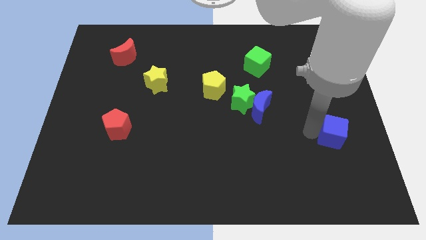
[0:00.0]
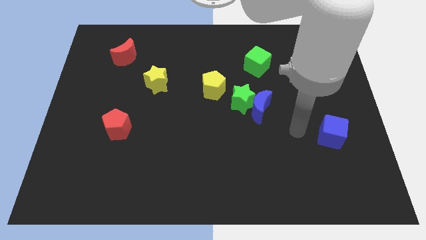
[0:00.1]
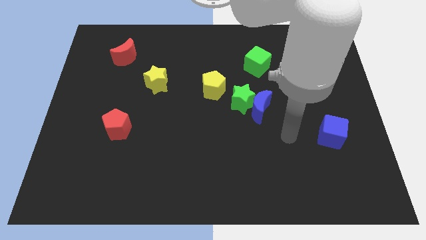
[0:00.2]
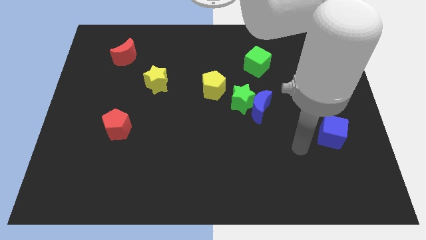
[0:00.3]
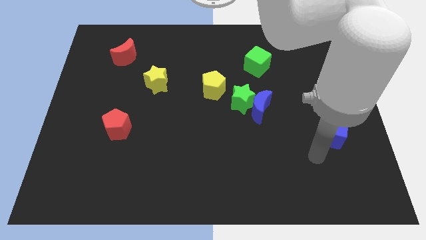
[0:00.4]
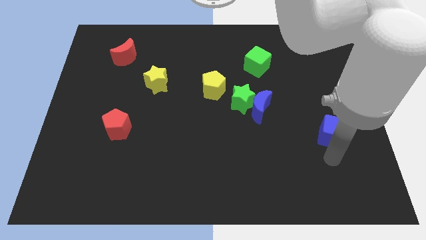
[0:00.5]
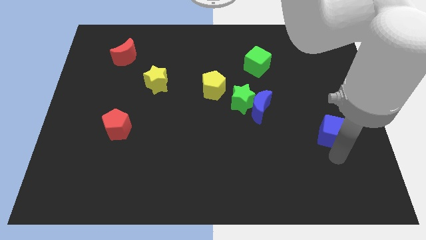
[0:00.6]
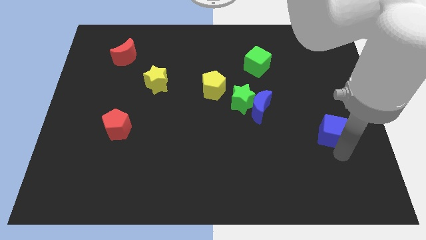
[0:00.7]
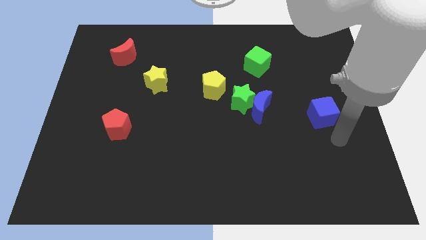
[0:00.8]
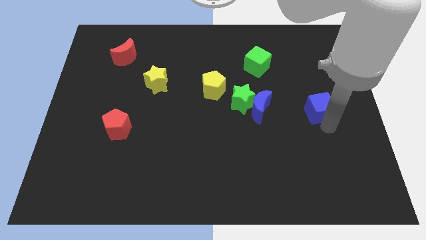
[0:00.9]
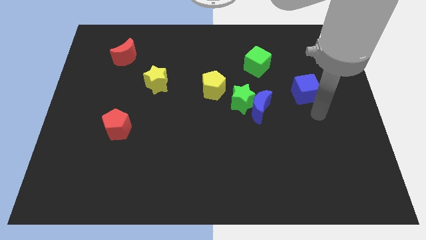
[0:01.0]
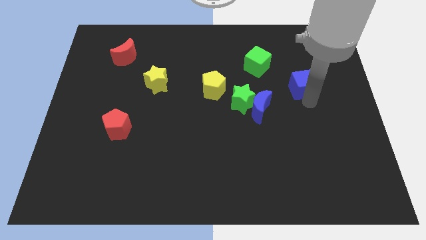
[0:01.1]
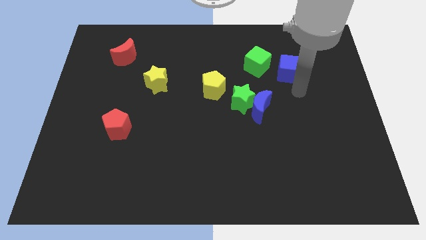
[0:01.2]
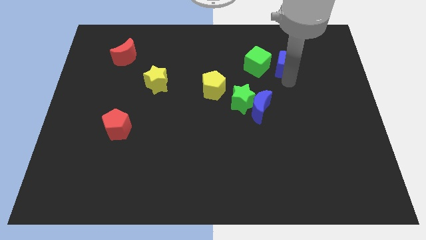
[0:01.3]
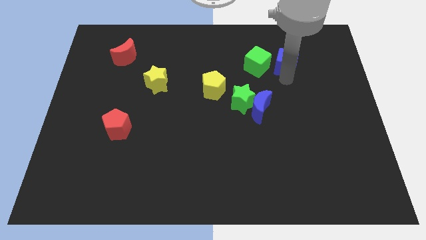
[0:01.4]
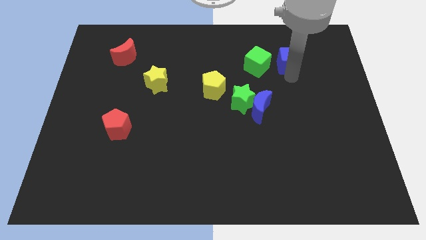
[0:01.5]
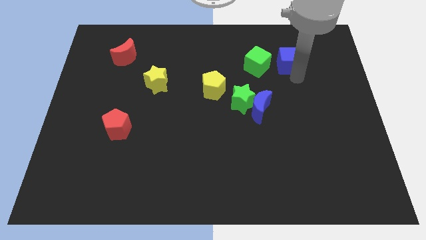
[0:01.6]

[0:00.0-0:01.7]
place the blue cube near to the green cube

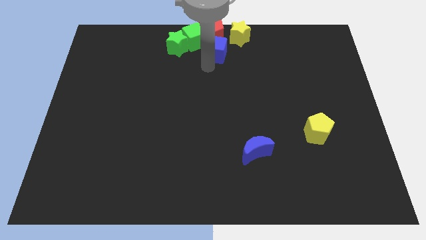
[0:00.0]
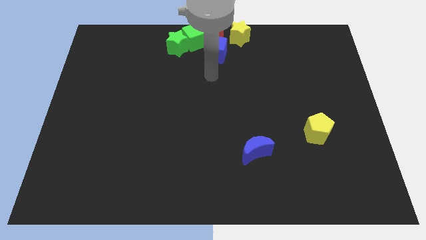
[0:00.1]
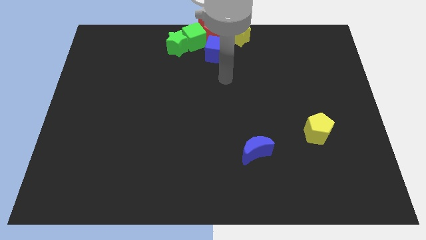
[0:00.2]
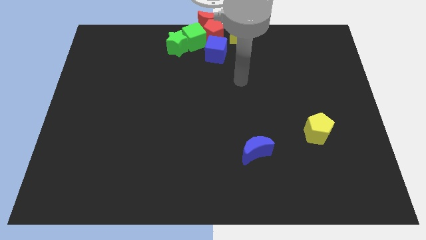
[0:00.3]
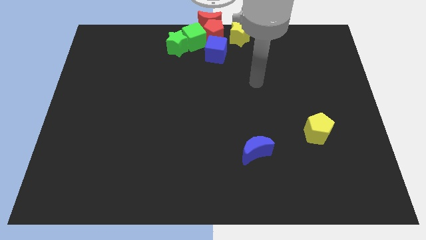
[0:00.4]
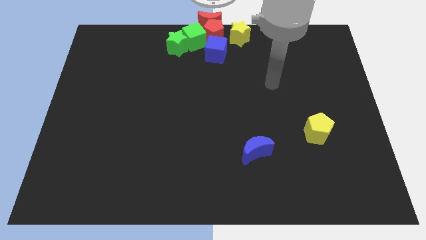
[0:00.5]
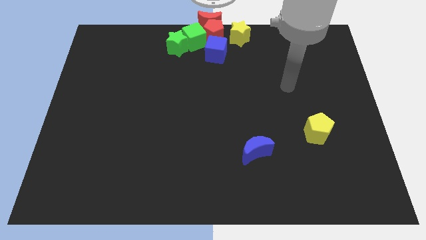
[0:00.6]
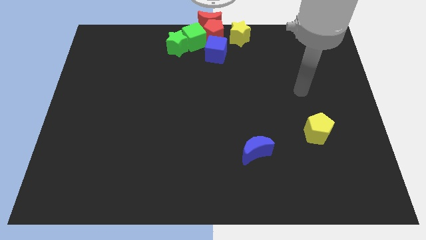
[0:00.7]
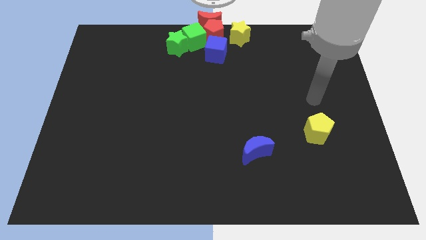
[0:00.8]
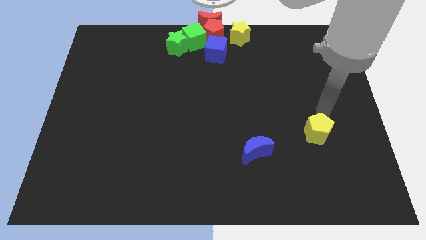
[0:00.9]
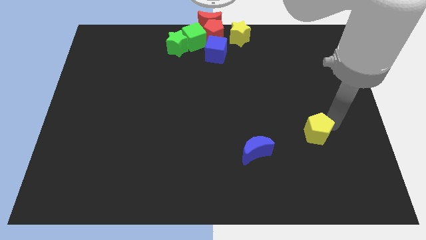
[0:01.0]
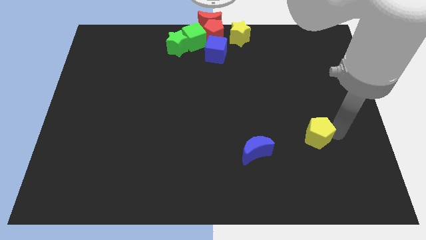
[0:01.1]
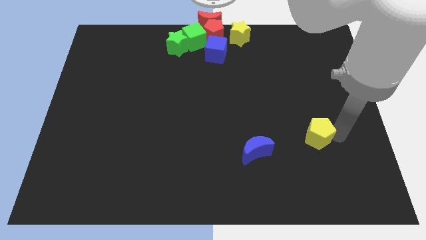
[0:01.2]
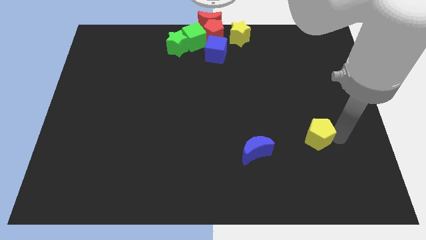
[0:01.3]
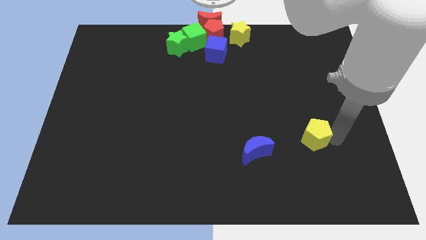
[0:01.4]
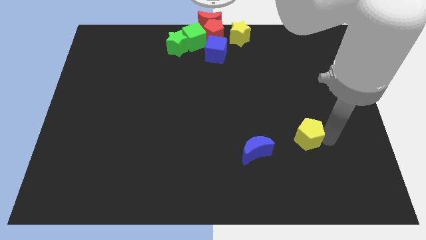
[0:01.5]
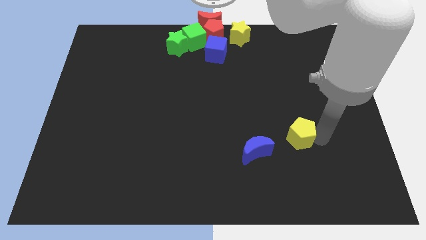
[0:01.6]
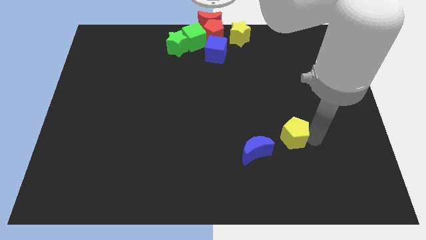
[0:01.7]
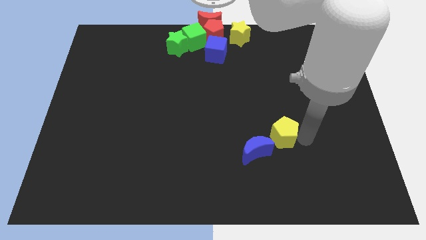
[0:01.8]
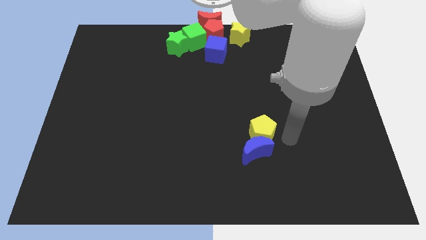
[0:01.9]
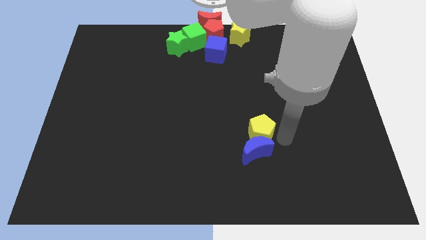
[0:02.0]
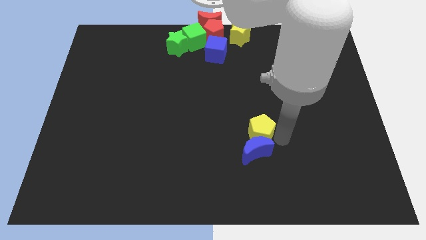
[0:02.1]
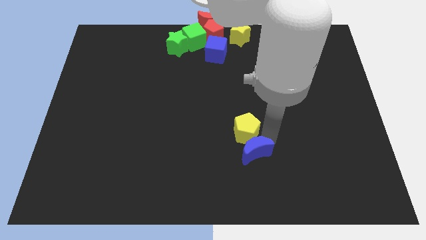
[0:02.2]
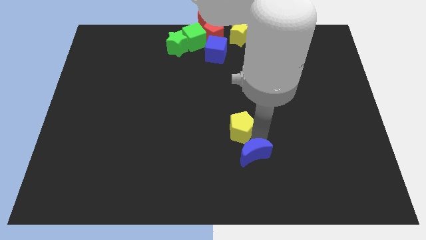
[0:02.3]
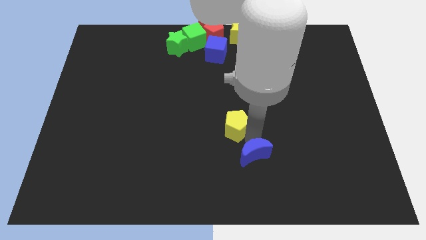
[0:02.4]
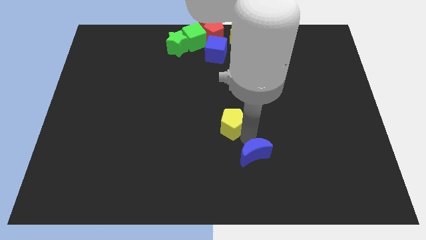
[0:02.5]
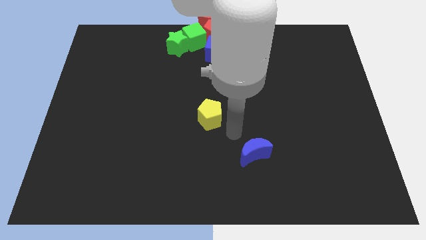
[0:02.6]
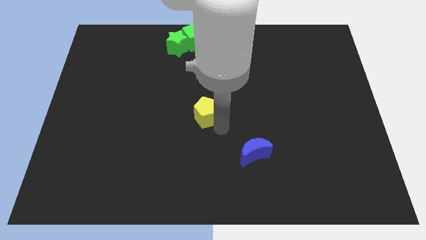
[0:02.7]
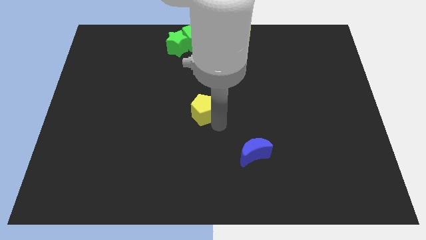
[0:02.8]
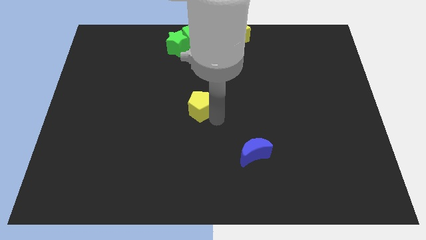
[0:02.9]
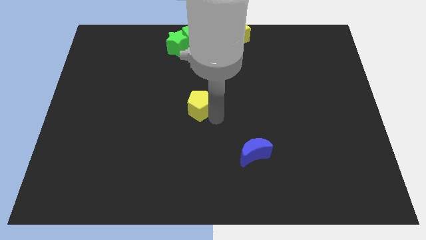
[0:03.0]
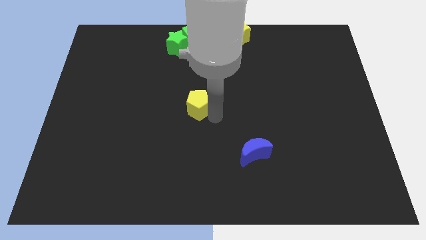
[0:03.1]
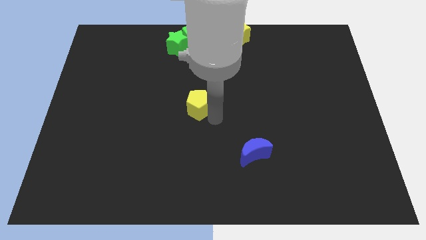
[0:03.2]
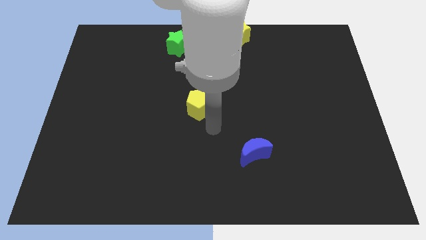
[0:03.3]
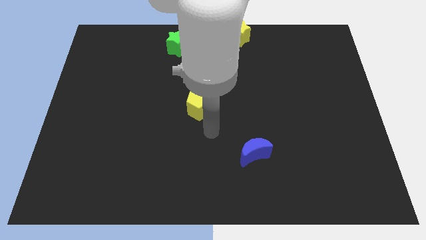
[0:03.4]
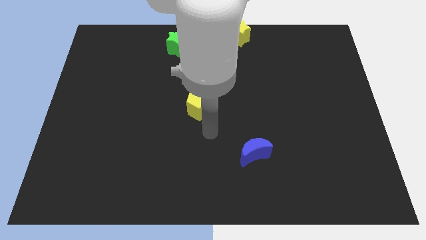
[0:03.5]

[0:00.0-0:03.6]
push the yellow pentagon to the center of the table

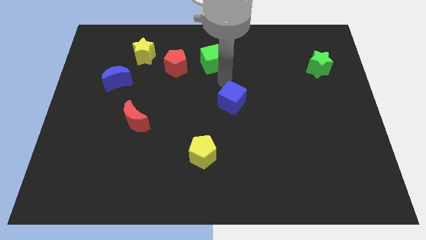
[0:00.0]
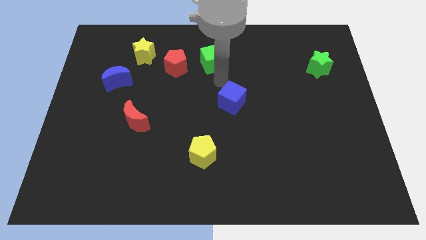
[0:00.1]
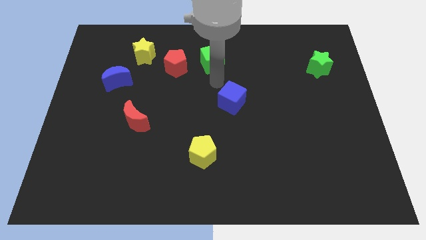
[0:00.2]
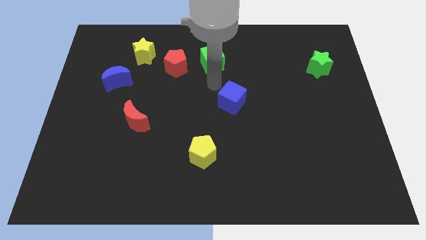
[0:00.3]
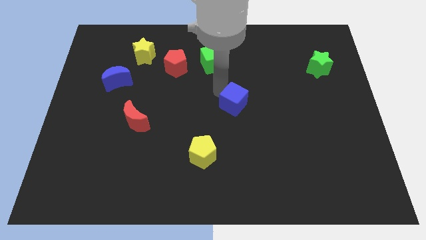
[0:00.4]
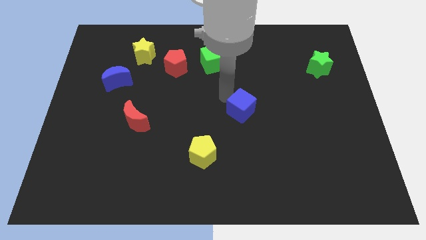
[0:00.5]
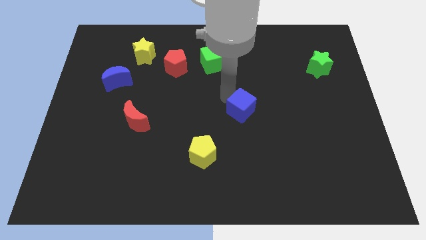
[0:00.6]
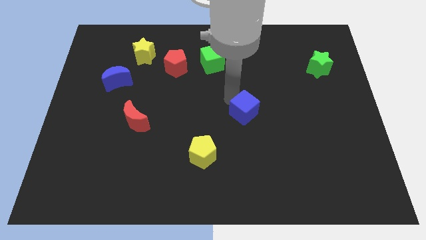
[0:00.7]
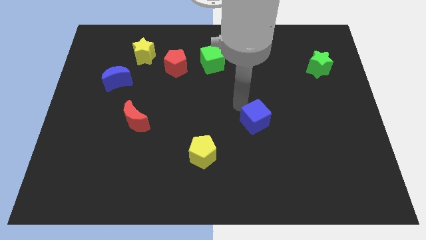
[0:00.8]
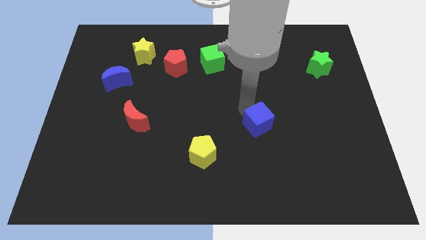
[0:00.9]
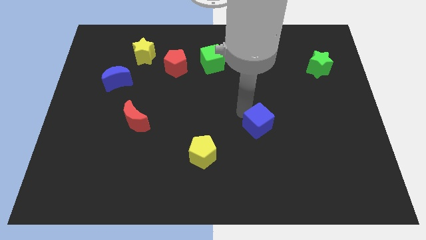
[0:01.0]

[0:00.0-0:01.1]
push the blue cube to the top right of the yellow pentagon

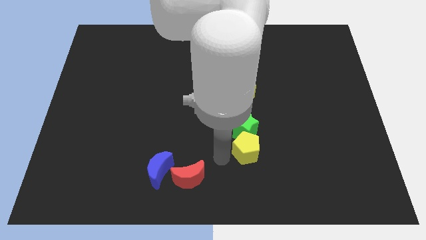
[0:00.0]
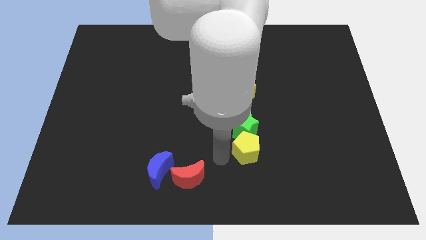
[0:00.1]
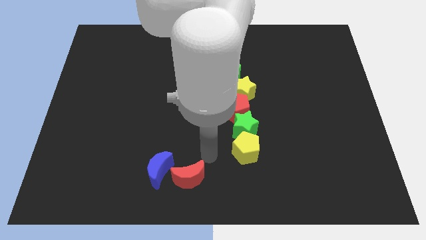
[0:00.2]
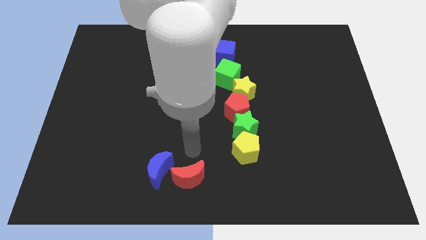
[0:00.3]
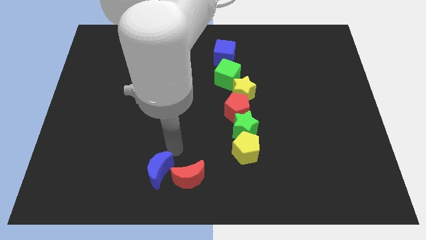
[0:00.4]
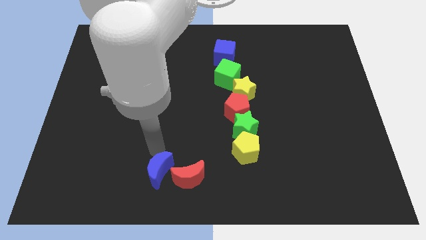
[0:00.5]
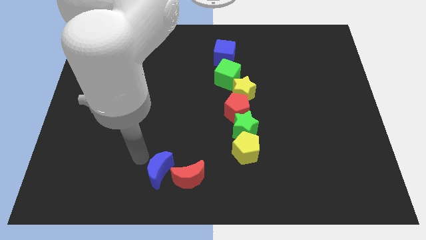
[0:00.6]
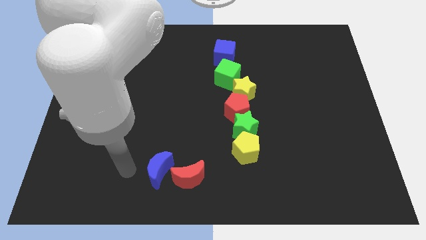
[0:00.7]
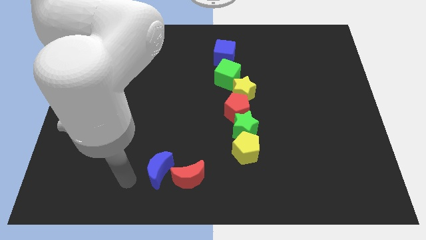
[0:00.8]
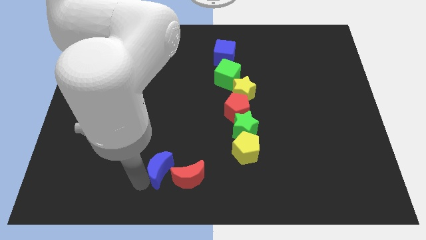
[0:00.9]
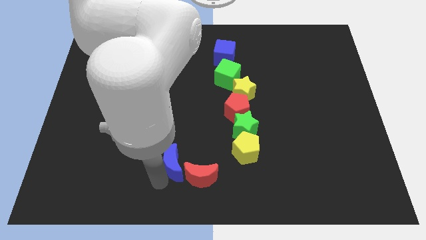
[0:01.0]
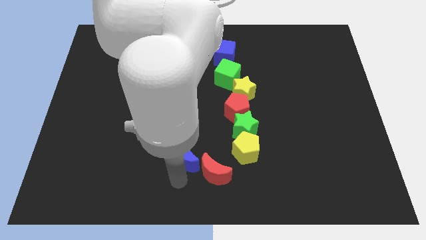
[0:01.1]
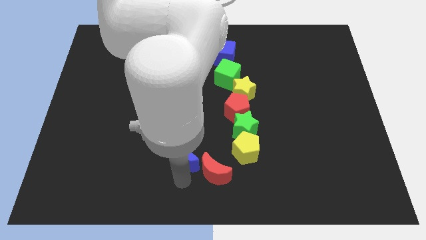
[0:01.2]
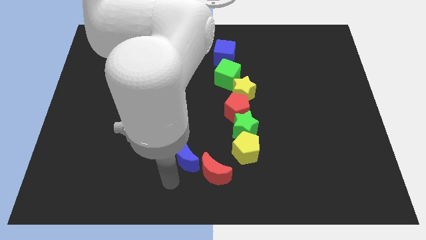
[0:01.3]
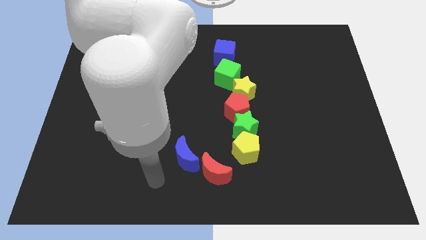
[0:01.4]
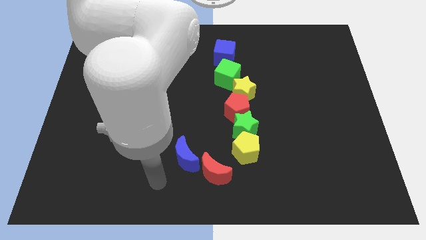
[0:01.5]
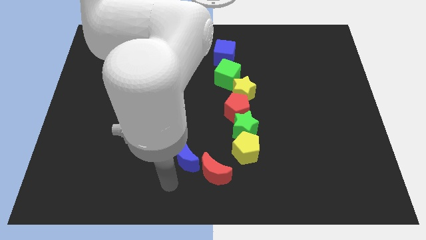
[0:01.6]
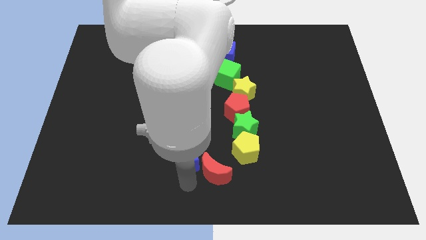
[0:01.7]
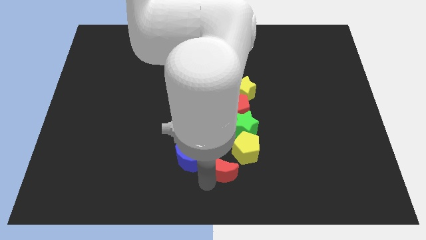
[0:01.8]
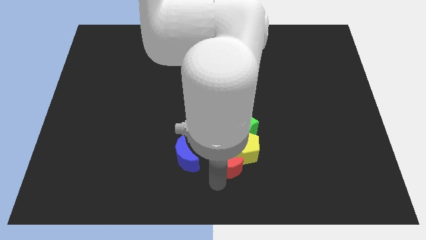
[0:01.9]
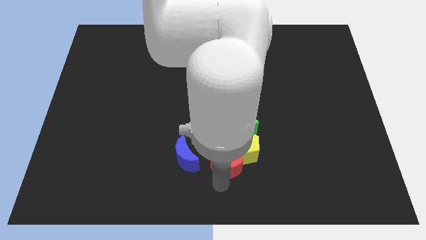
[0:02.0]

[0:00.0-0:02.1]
slide the red moon into the yellow pentagon

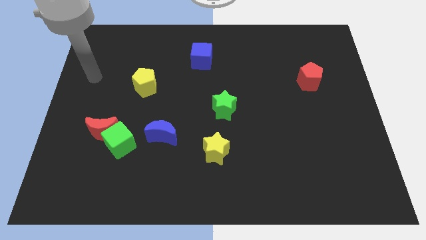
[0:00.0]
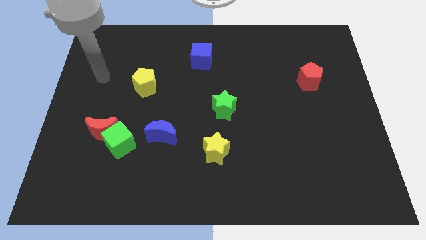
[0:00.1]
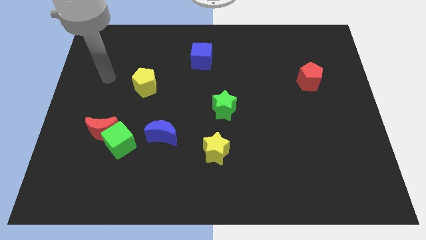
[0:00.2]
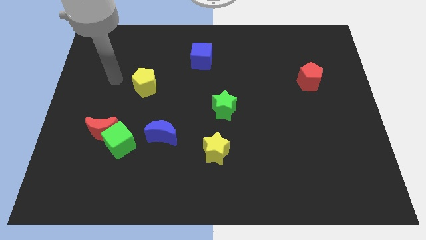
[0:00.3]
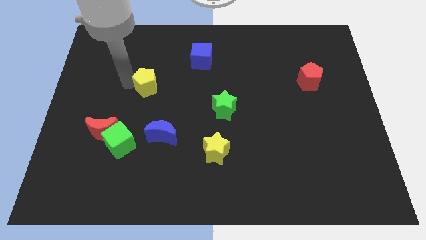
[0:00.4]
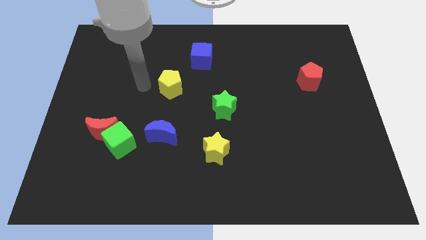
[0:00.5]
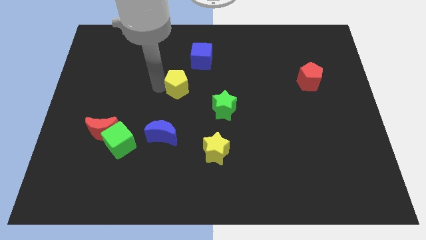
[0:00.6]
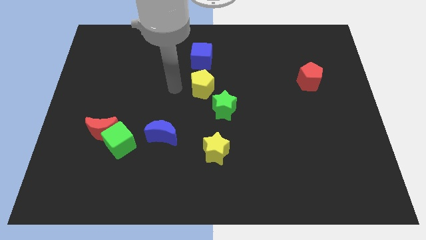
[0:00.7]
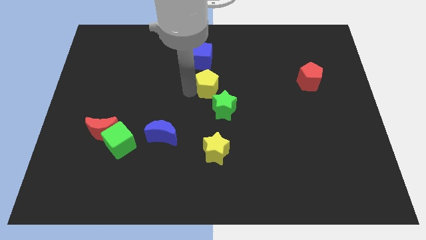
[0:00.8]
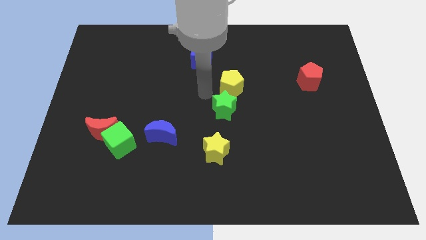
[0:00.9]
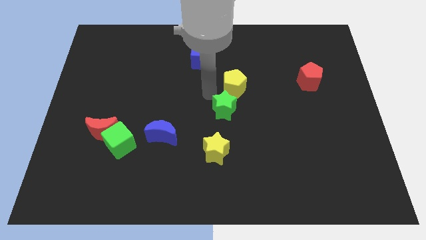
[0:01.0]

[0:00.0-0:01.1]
place the yellow pentagon diagonally top right to the green star
